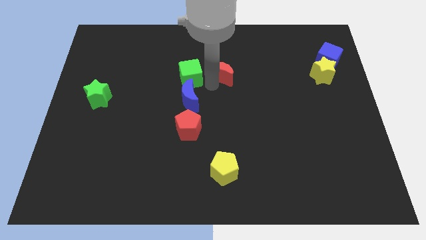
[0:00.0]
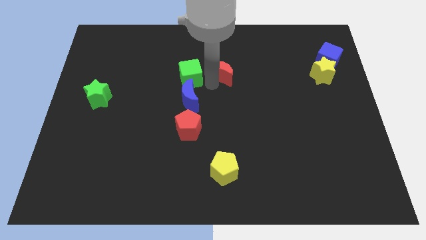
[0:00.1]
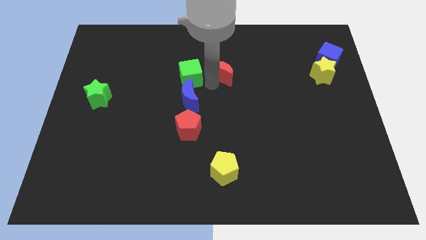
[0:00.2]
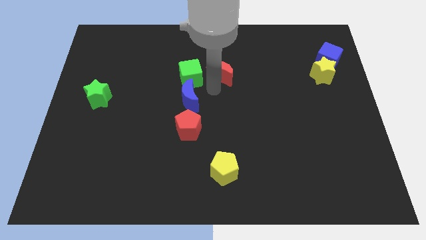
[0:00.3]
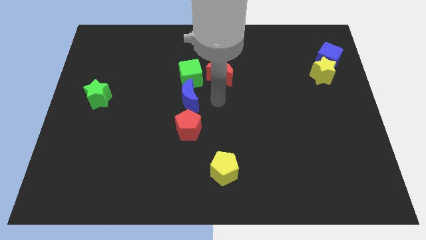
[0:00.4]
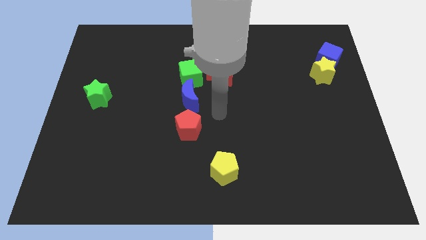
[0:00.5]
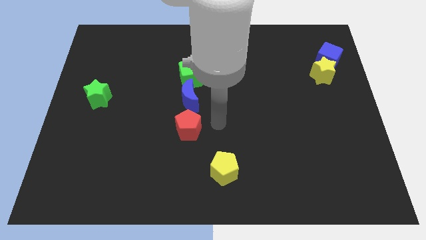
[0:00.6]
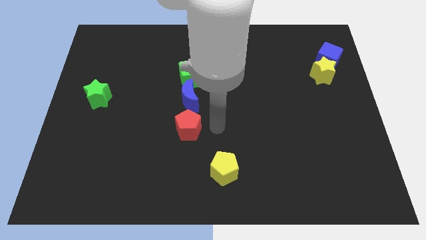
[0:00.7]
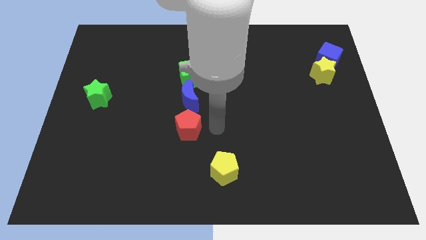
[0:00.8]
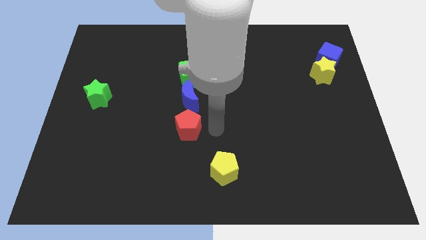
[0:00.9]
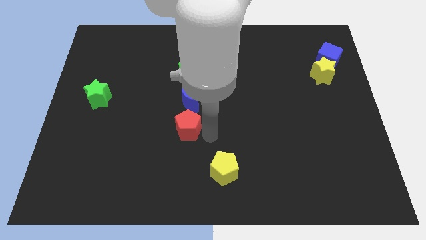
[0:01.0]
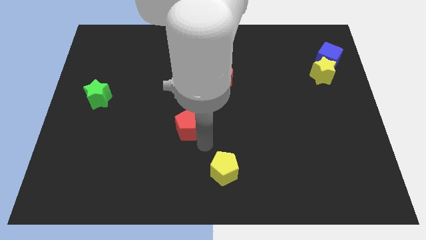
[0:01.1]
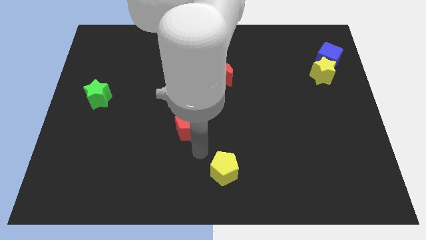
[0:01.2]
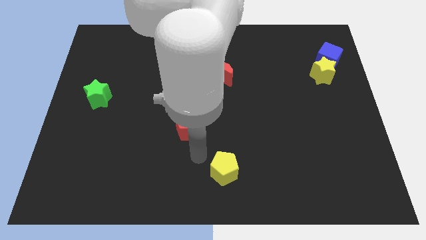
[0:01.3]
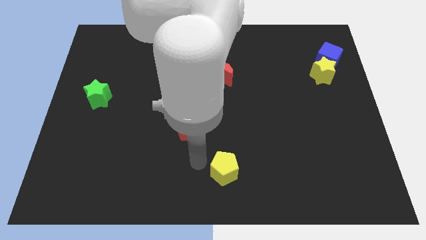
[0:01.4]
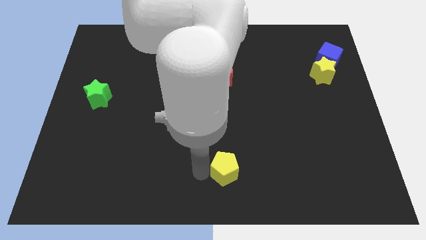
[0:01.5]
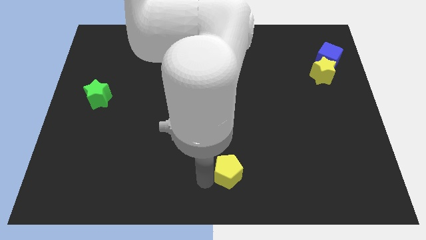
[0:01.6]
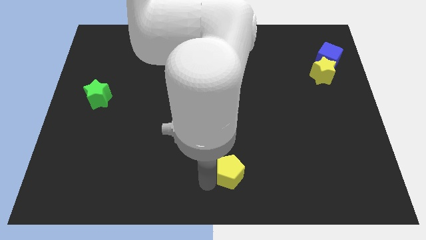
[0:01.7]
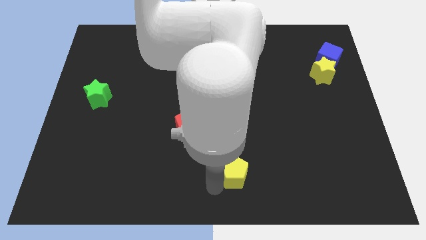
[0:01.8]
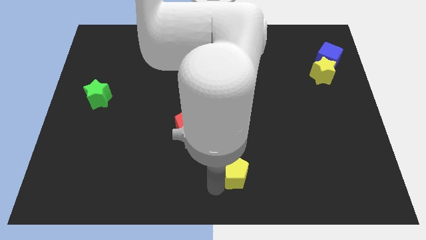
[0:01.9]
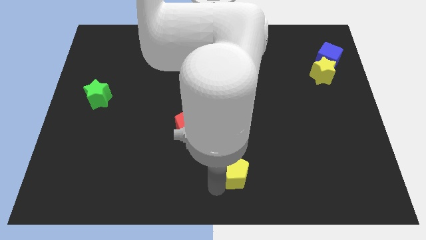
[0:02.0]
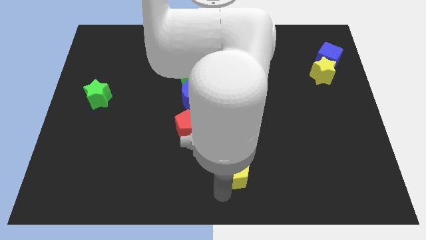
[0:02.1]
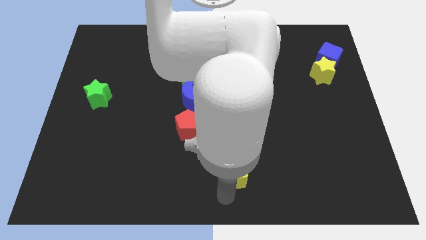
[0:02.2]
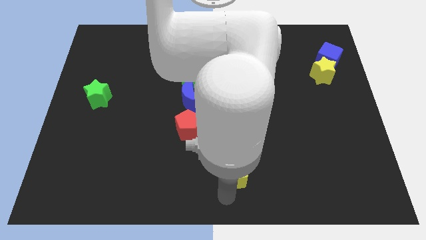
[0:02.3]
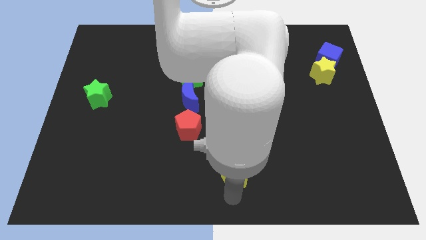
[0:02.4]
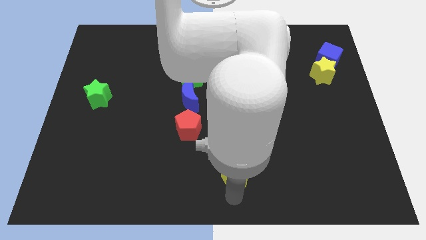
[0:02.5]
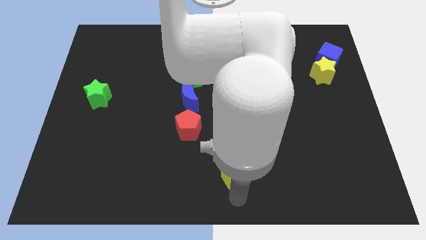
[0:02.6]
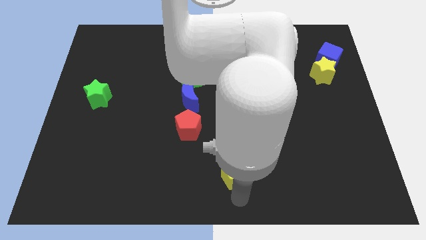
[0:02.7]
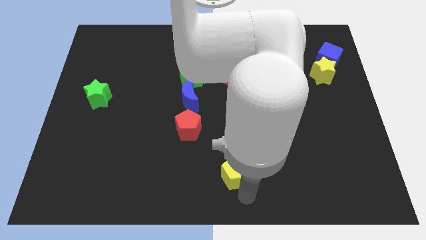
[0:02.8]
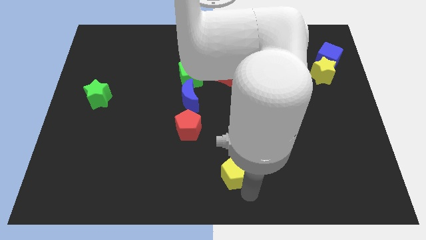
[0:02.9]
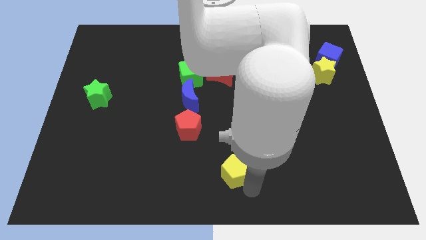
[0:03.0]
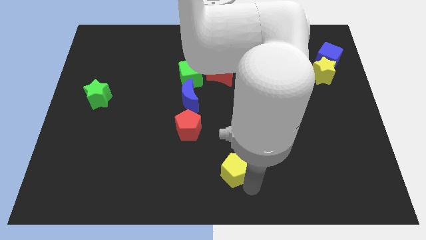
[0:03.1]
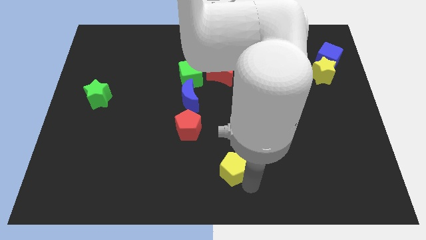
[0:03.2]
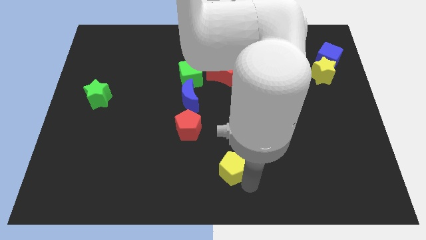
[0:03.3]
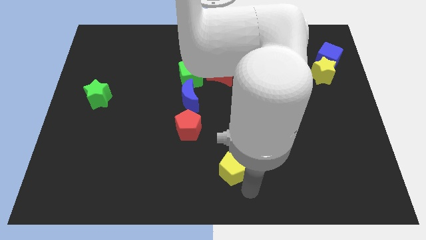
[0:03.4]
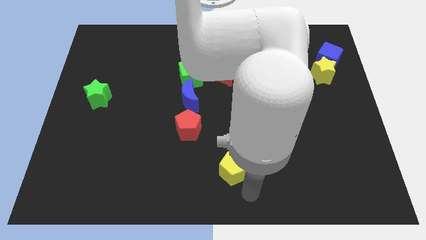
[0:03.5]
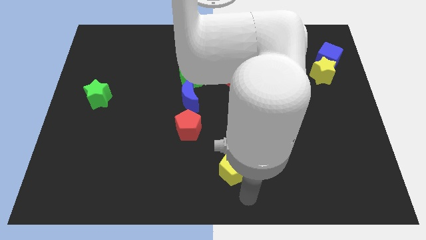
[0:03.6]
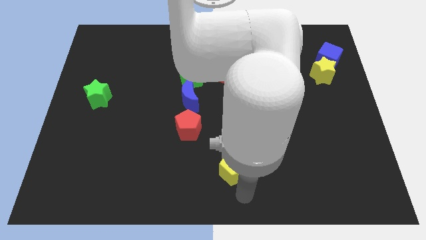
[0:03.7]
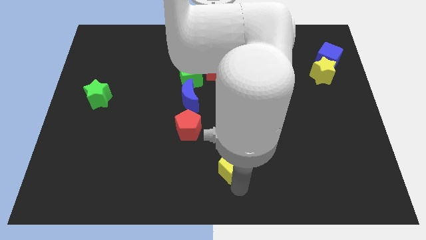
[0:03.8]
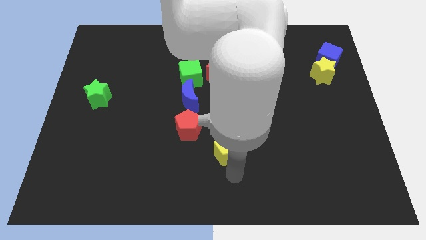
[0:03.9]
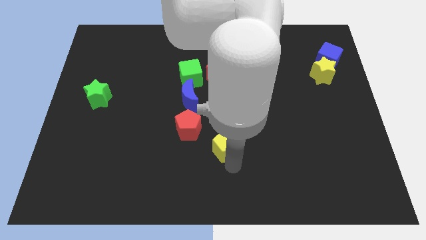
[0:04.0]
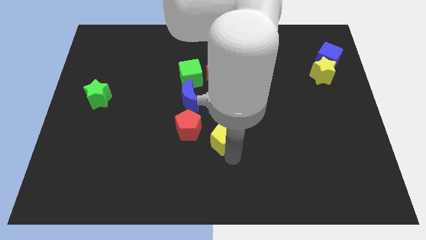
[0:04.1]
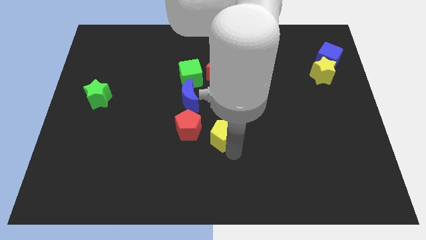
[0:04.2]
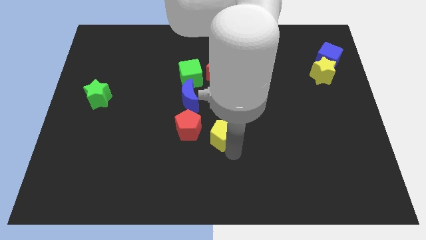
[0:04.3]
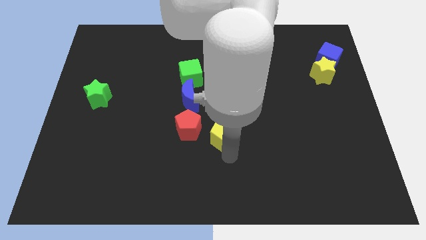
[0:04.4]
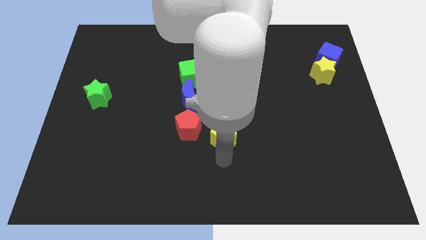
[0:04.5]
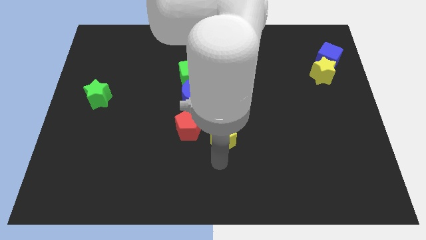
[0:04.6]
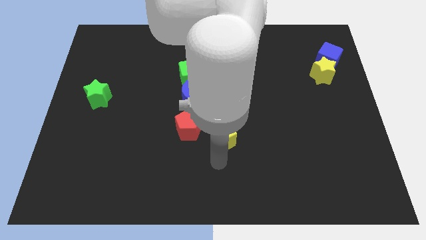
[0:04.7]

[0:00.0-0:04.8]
push yellow pentagon towards the top

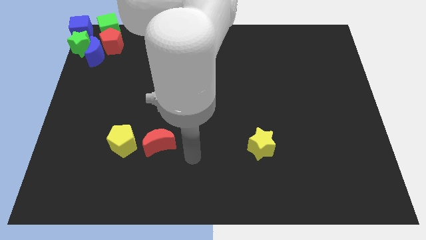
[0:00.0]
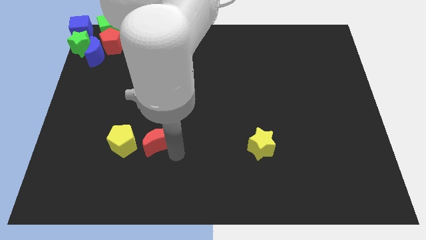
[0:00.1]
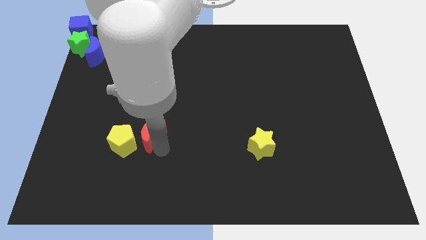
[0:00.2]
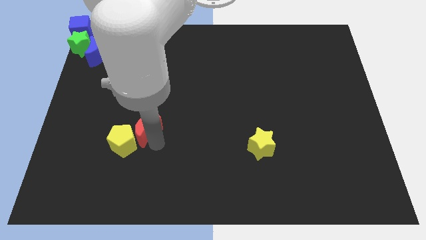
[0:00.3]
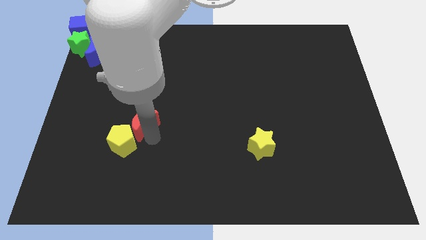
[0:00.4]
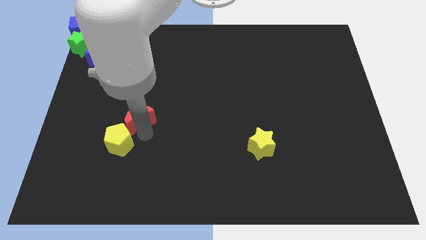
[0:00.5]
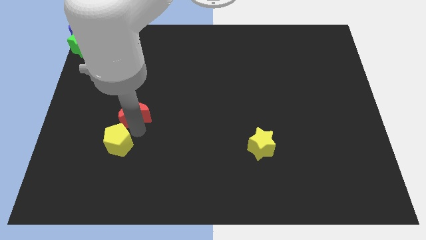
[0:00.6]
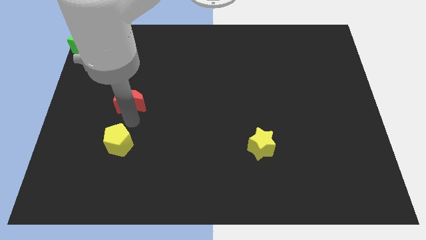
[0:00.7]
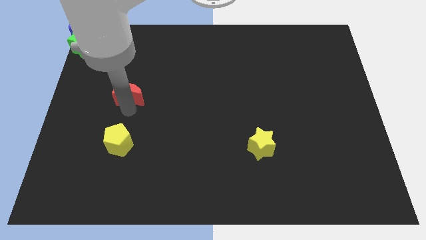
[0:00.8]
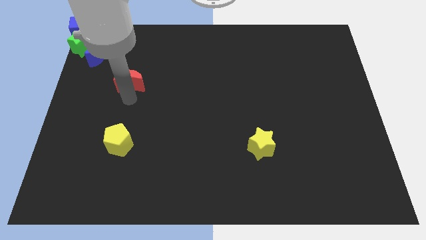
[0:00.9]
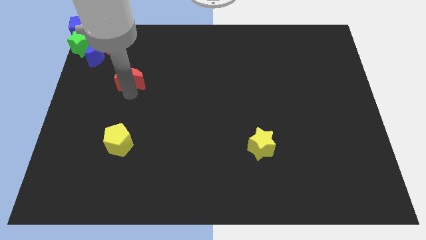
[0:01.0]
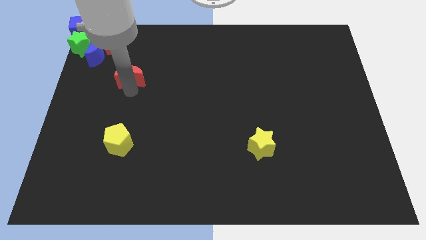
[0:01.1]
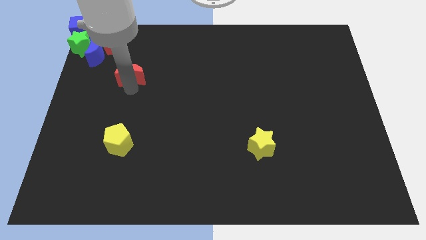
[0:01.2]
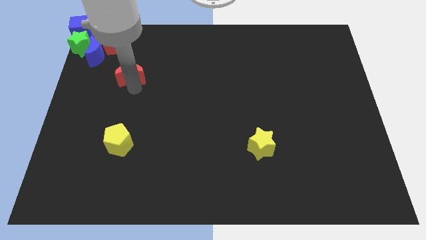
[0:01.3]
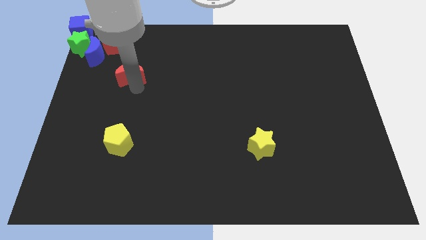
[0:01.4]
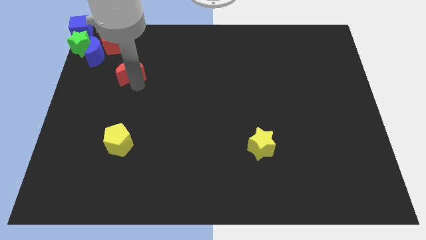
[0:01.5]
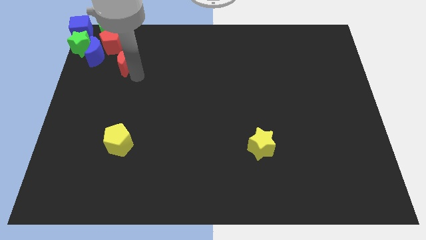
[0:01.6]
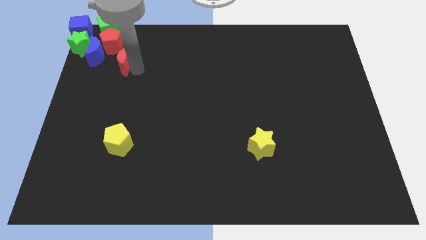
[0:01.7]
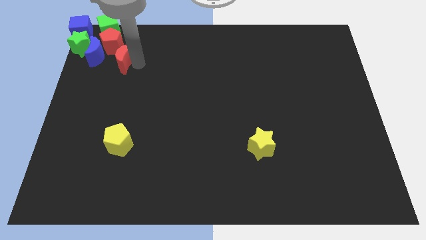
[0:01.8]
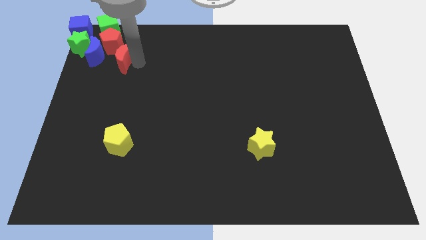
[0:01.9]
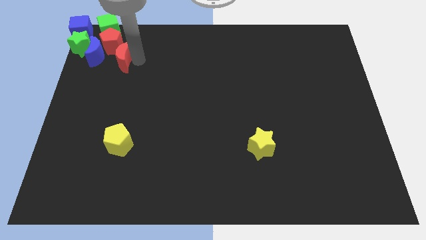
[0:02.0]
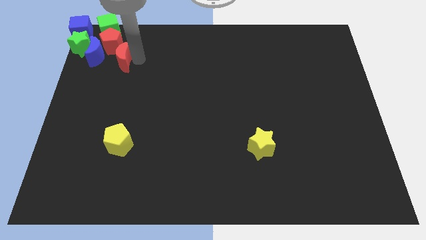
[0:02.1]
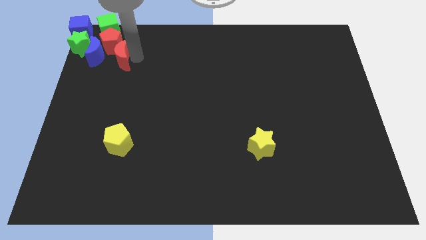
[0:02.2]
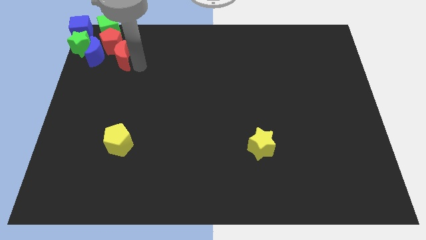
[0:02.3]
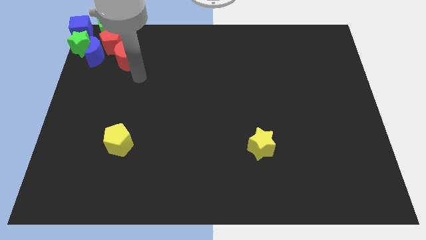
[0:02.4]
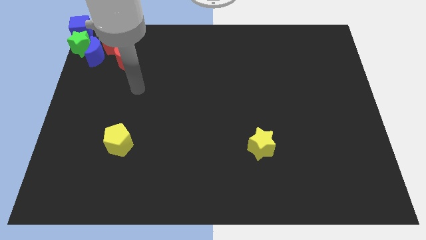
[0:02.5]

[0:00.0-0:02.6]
move the red moon into the red pentagon

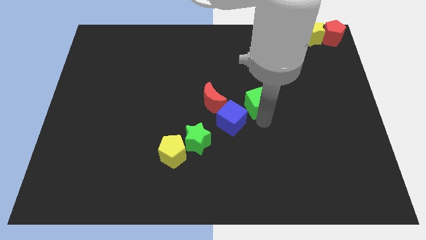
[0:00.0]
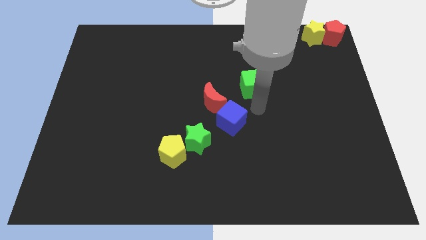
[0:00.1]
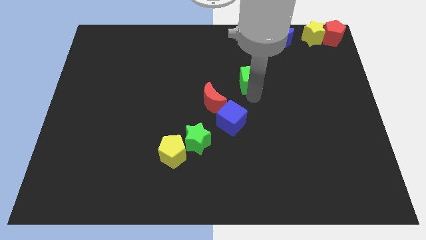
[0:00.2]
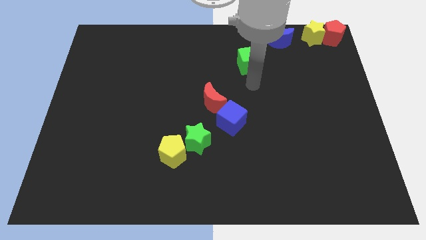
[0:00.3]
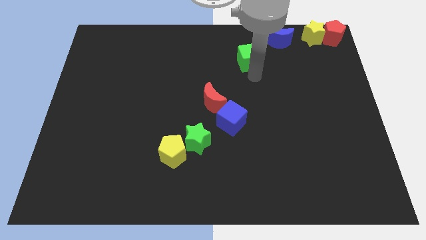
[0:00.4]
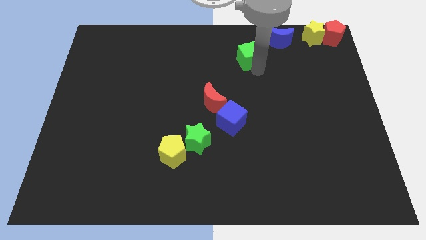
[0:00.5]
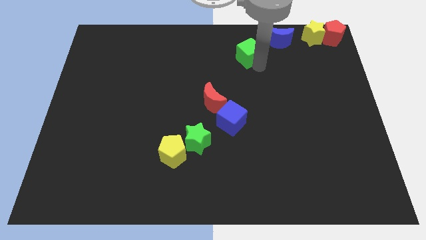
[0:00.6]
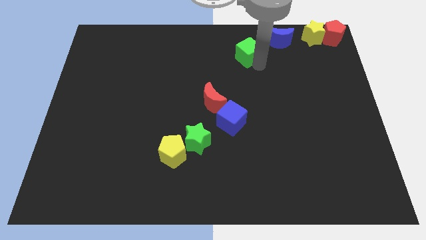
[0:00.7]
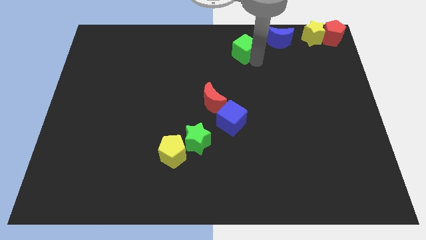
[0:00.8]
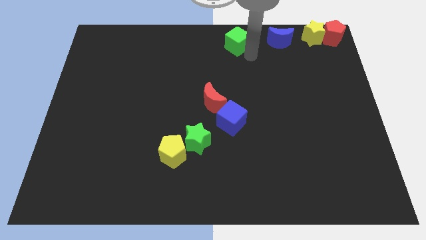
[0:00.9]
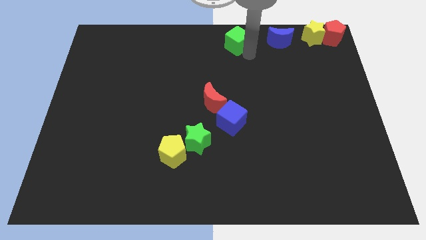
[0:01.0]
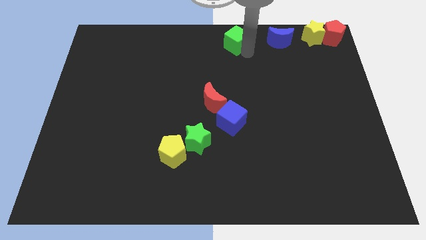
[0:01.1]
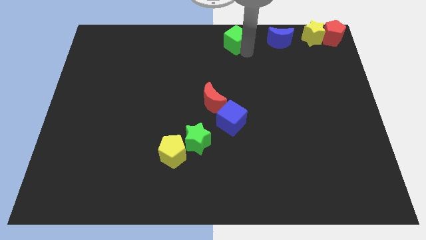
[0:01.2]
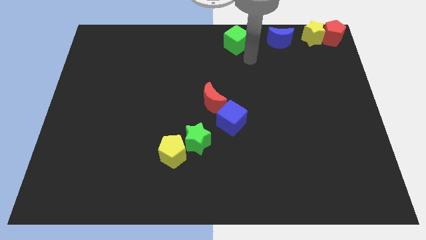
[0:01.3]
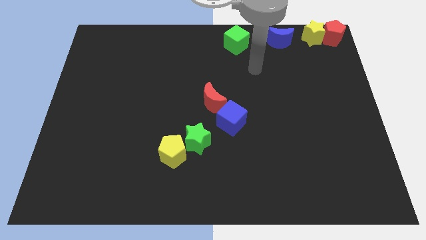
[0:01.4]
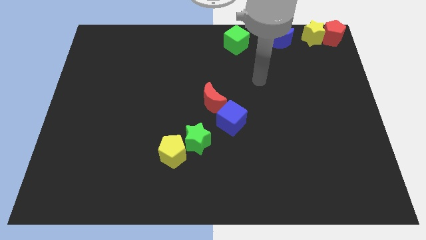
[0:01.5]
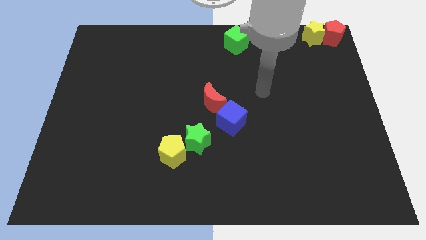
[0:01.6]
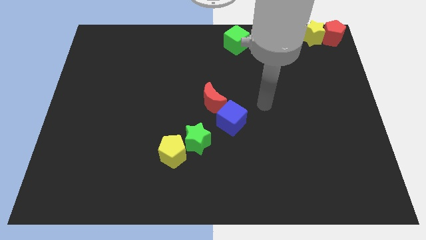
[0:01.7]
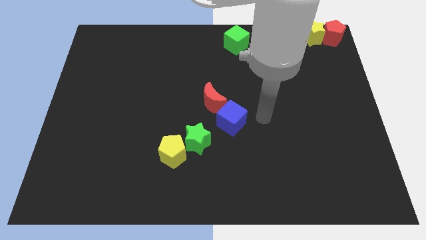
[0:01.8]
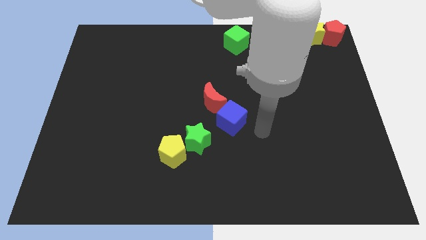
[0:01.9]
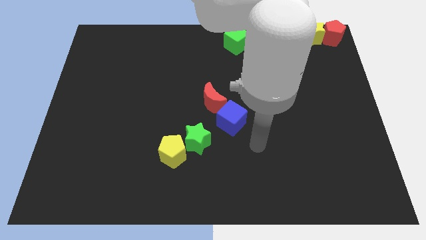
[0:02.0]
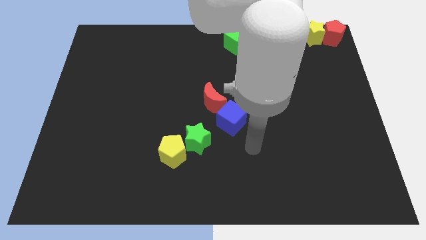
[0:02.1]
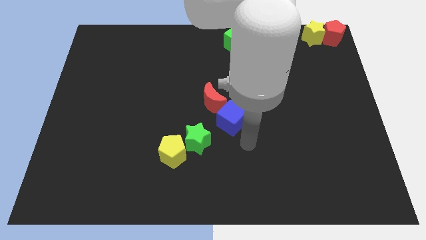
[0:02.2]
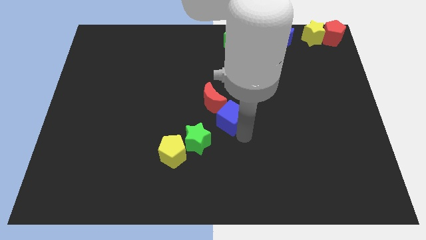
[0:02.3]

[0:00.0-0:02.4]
drag the green cube to the top center of the board
